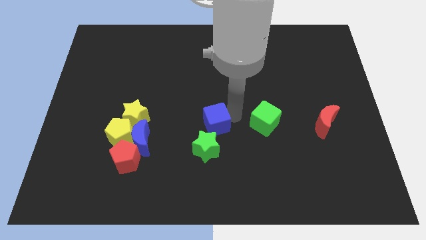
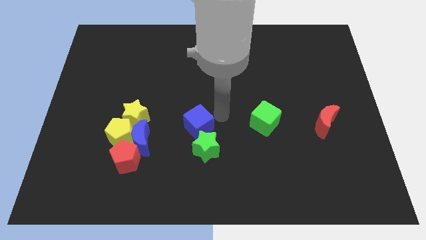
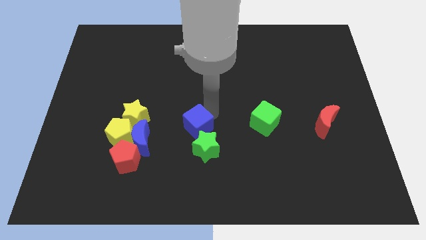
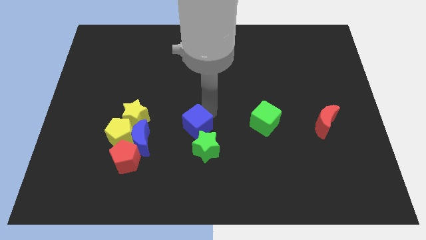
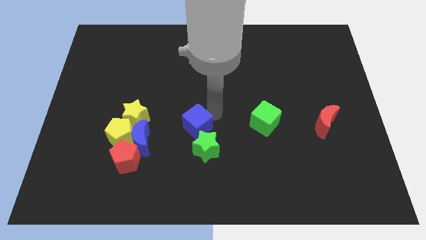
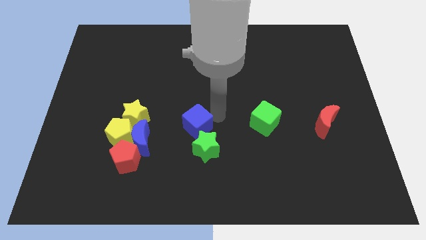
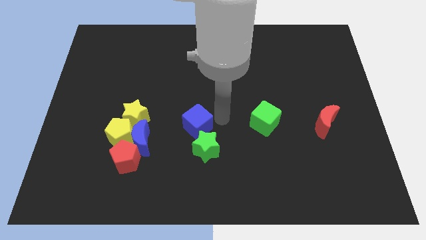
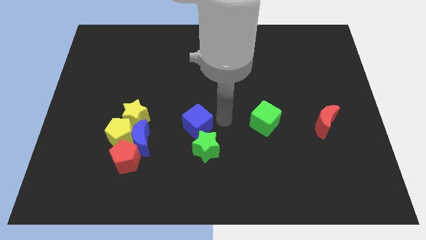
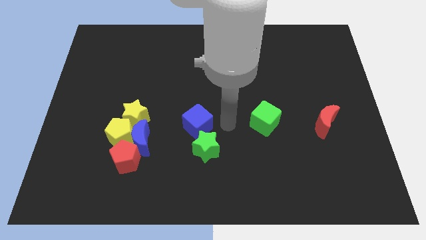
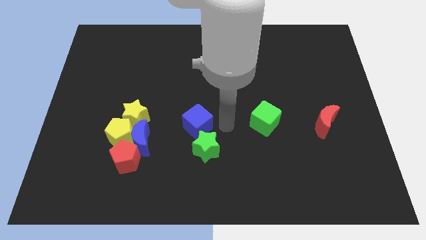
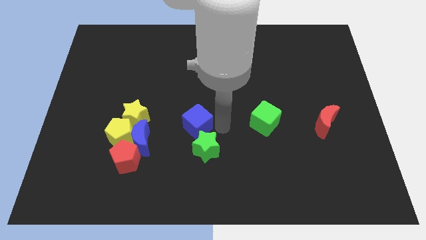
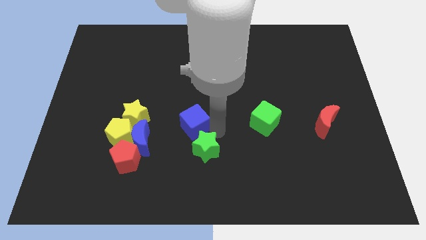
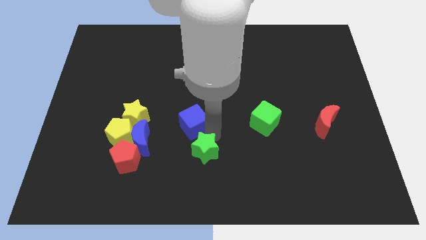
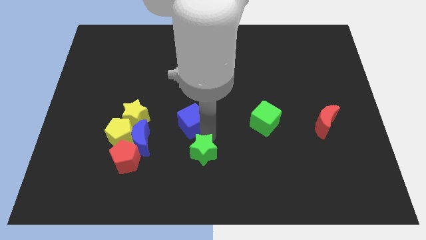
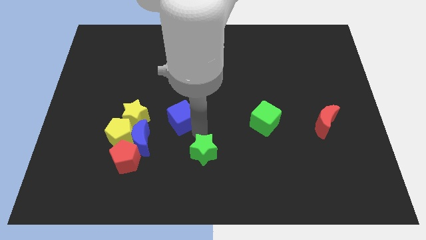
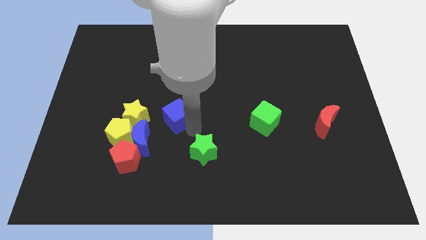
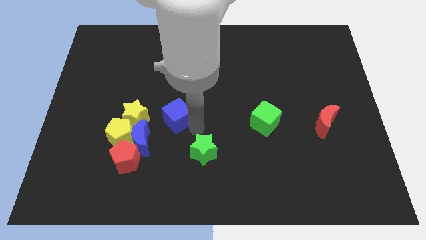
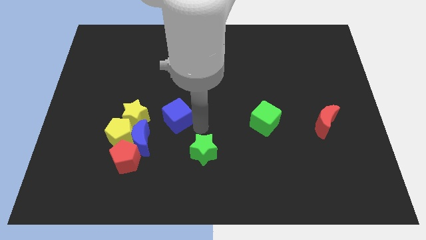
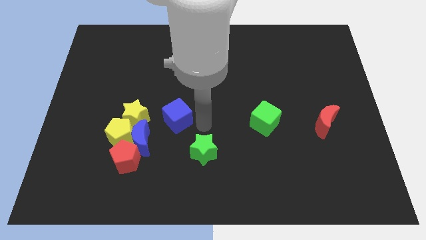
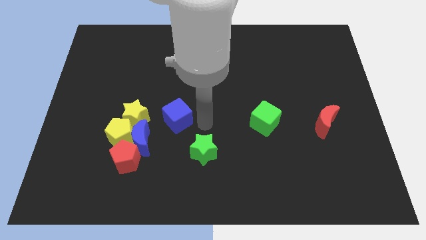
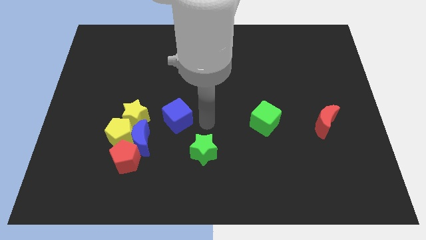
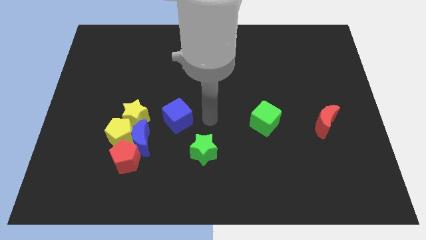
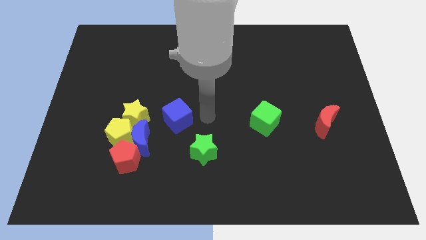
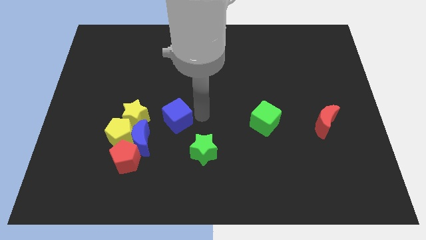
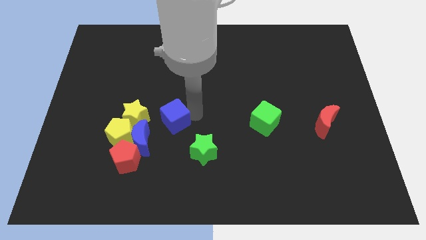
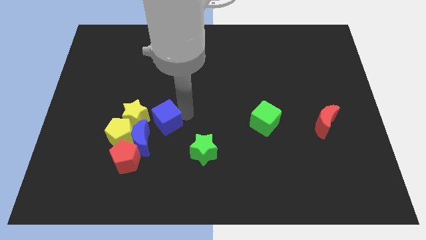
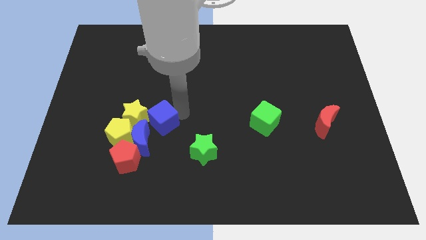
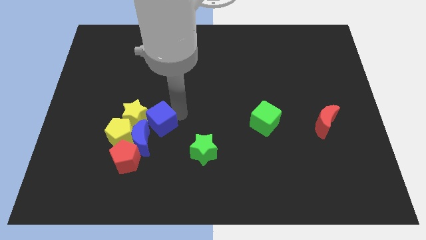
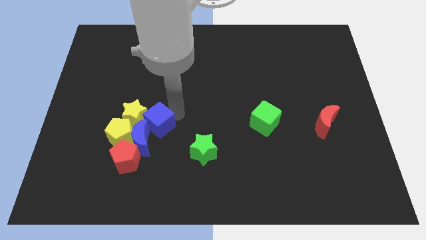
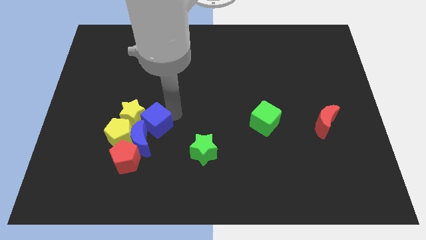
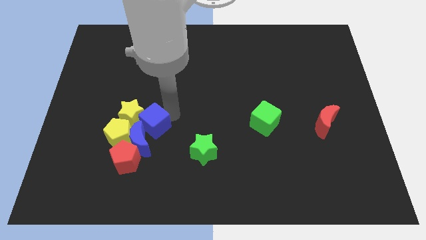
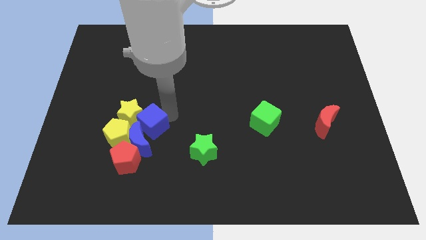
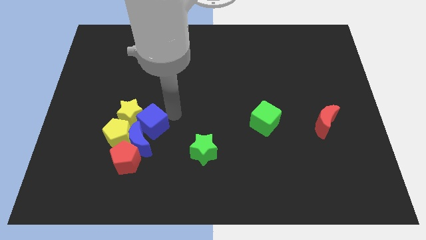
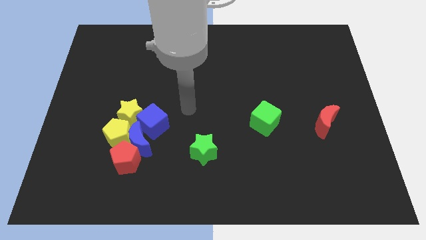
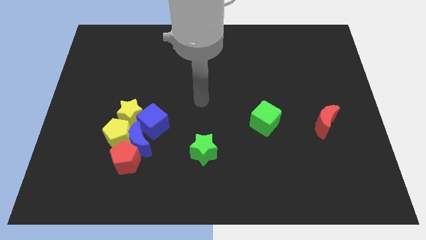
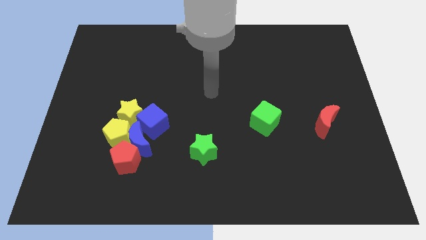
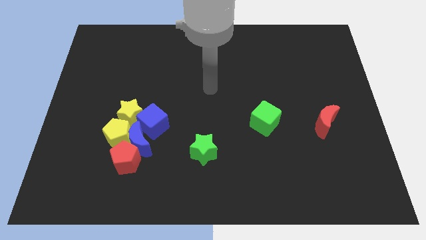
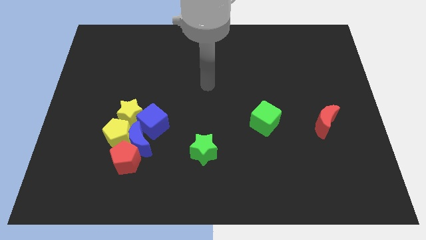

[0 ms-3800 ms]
push blue cube into yellow star

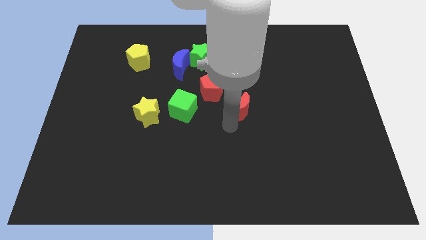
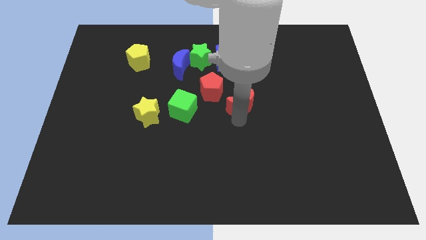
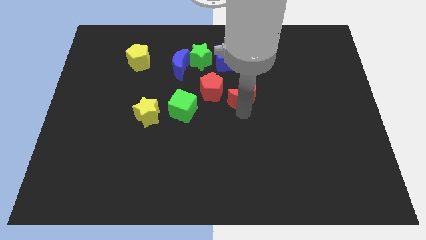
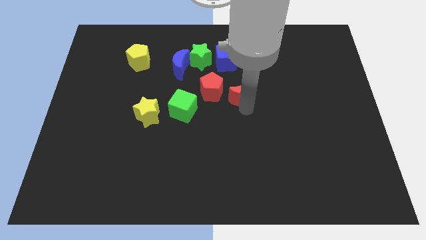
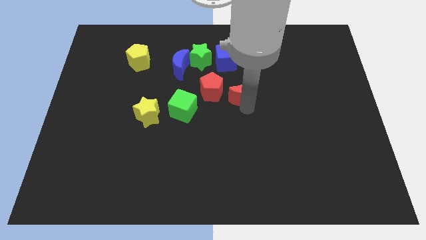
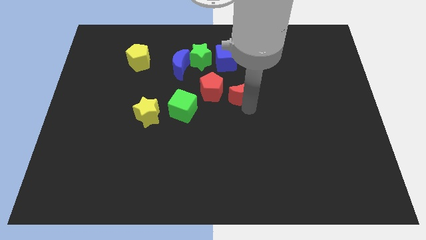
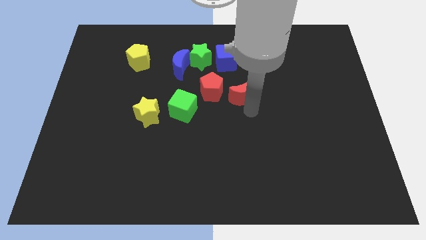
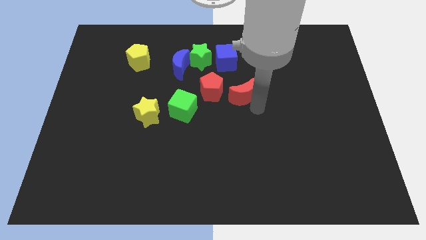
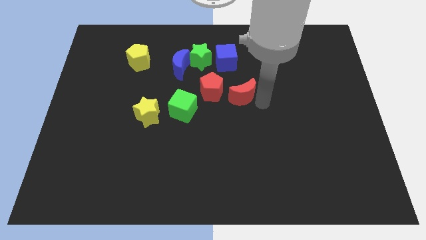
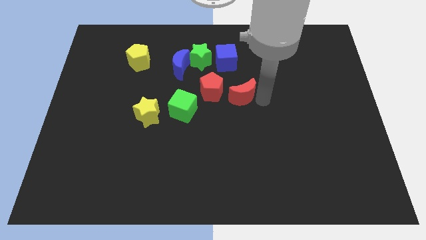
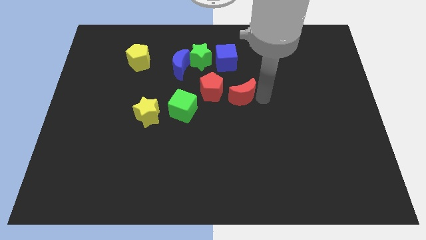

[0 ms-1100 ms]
push the red crescent to the right of the red pentagon

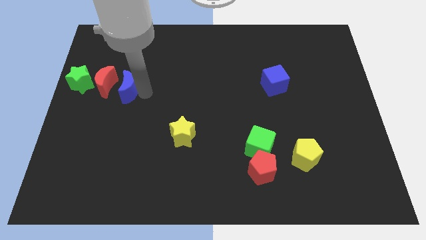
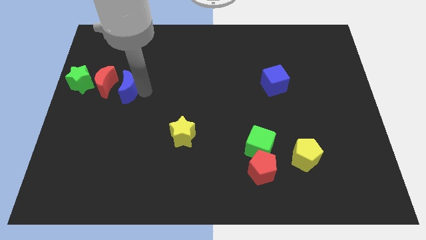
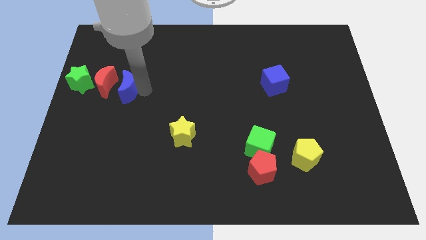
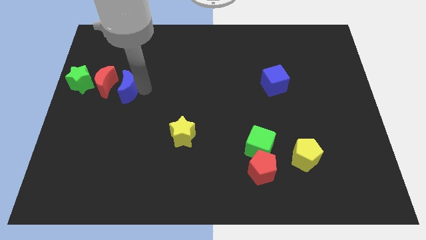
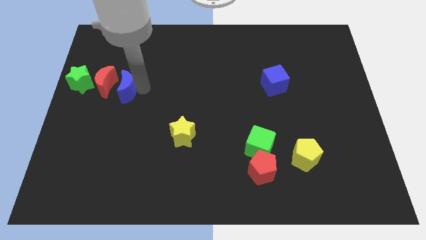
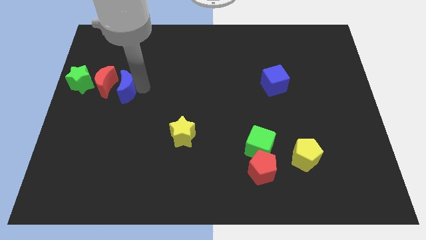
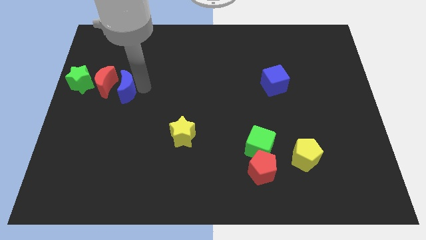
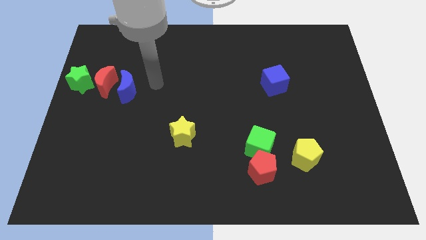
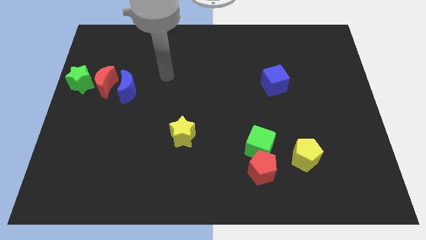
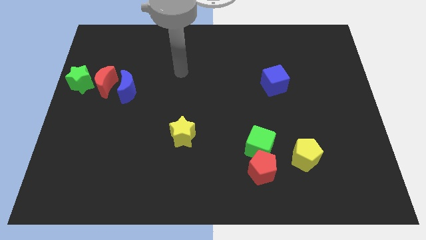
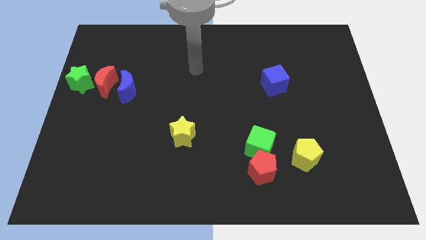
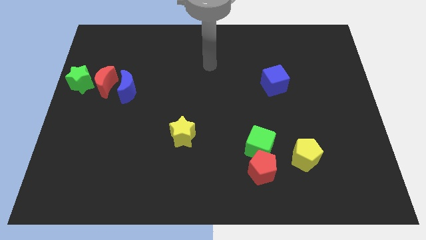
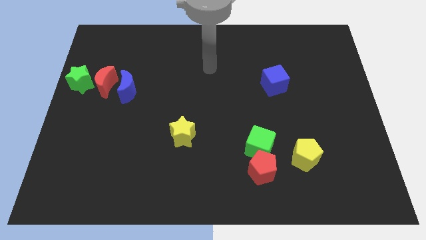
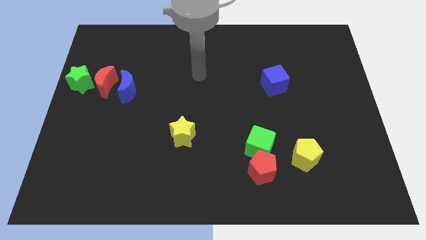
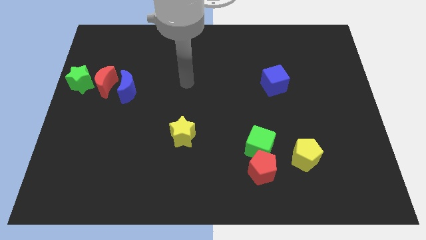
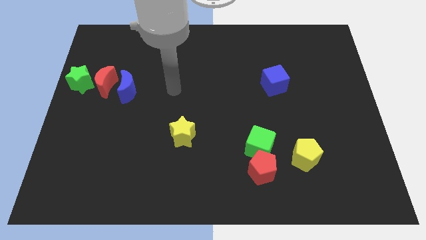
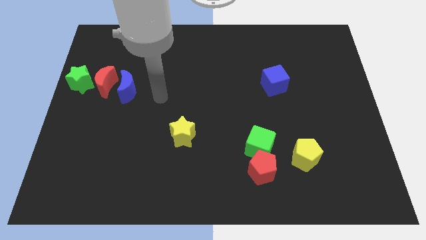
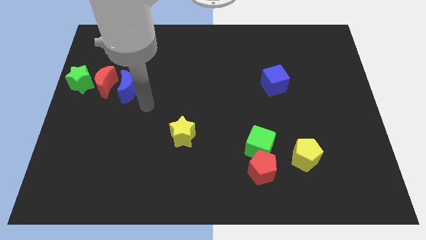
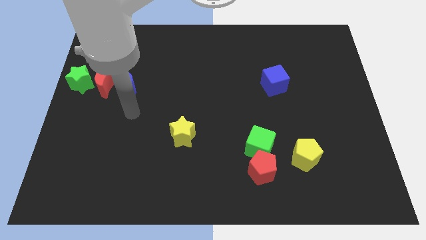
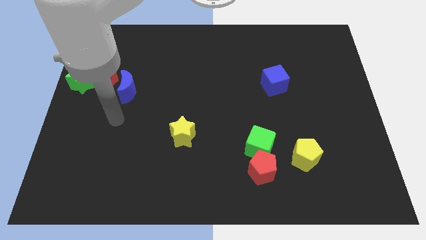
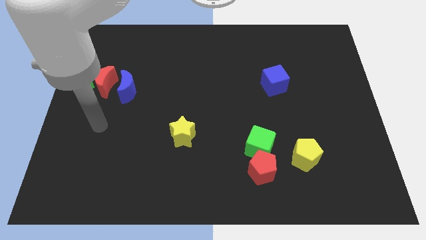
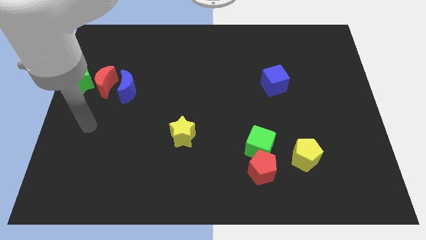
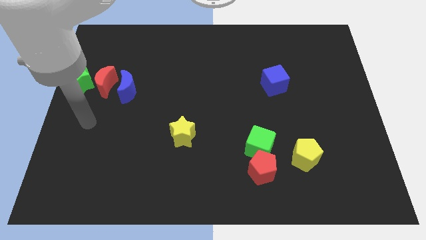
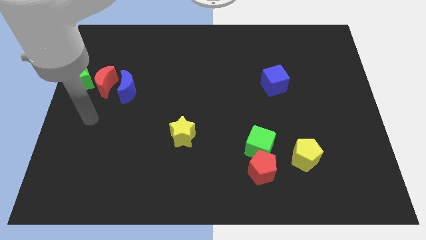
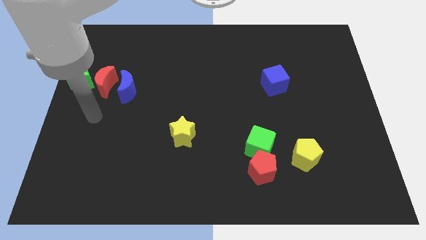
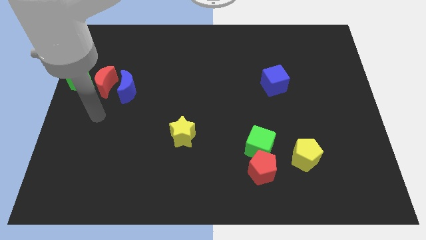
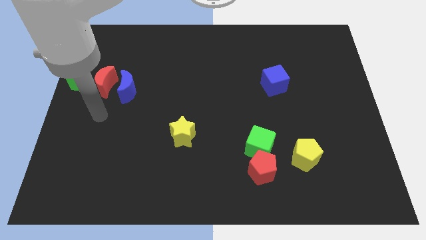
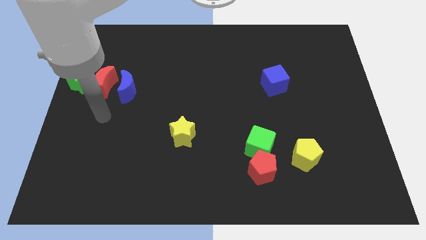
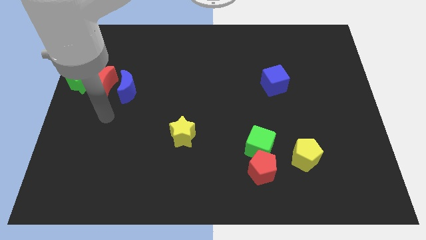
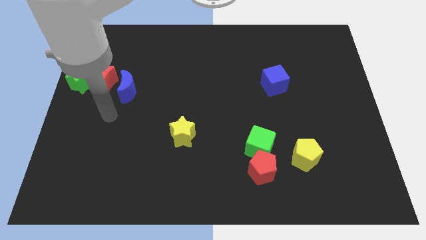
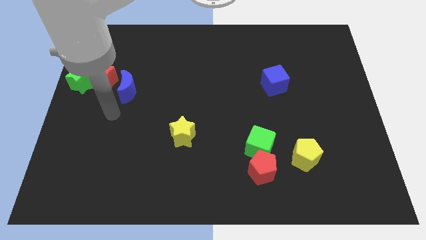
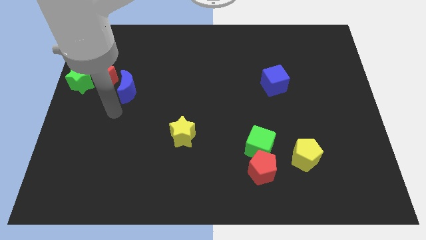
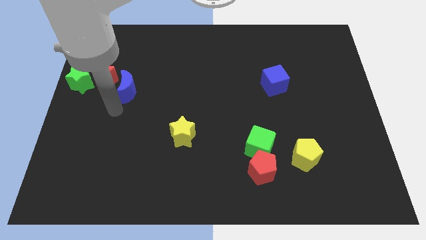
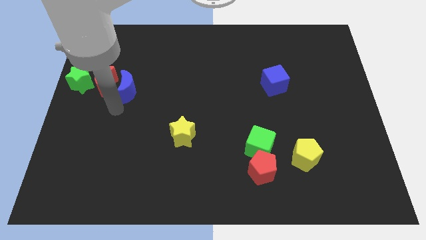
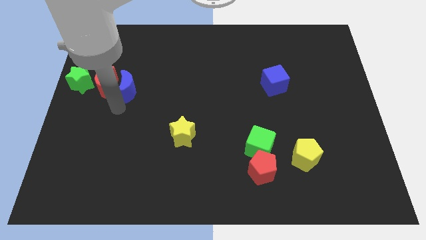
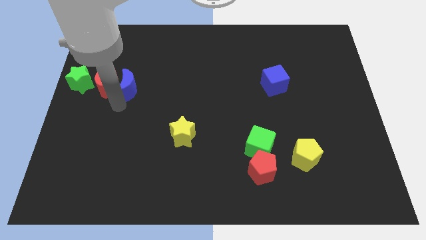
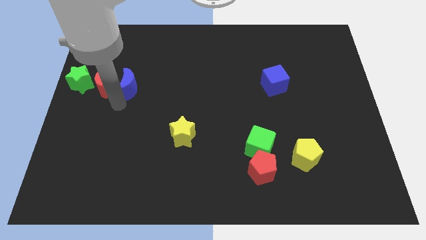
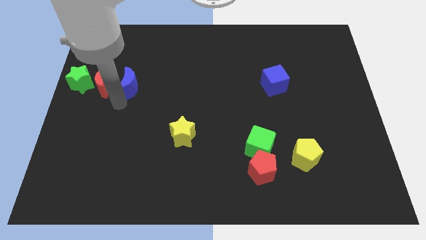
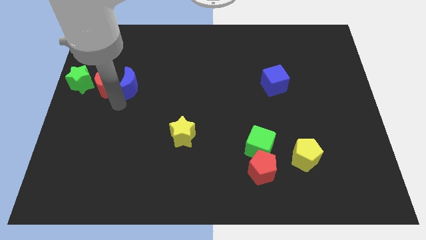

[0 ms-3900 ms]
move blue crescent slightly towards up

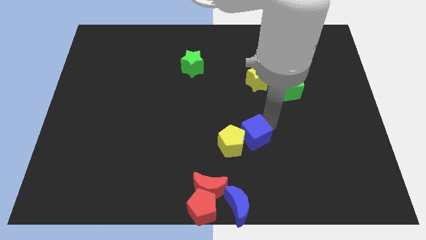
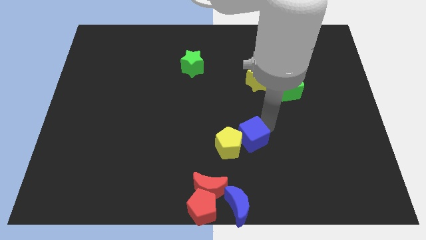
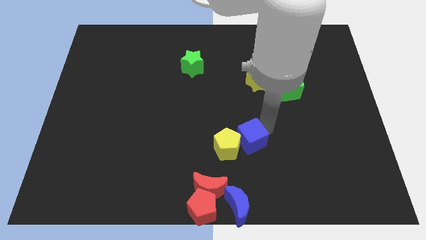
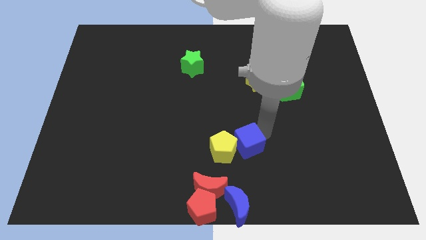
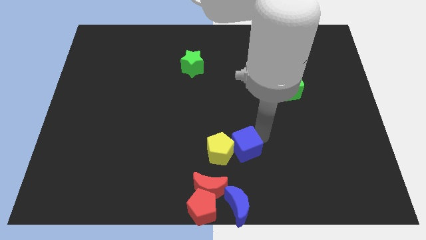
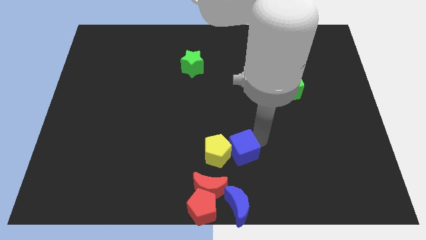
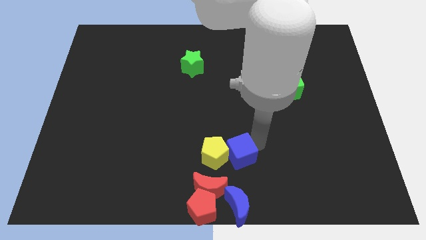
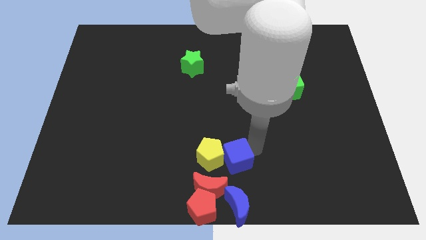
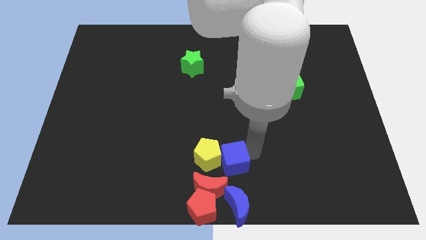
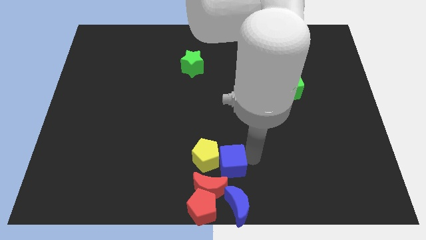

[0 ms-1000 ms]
place blue cube above blue crescent
